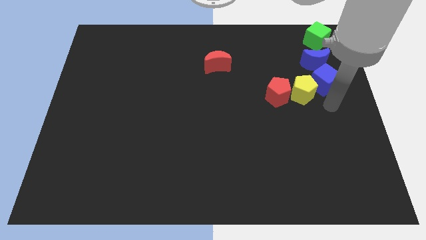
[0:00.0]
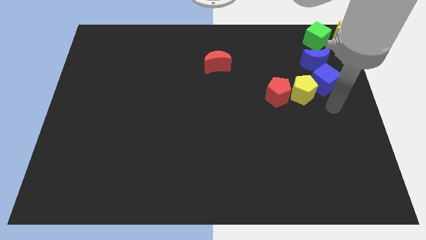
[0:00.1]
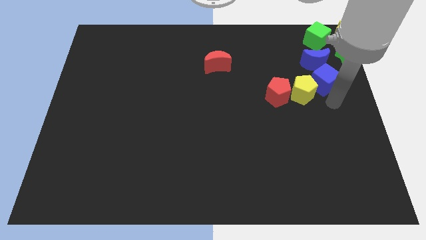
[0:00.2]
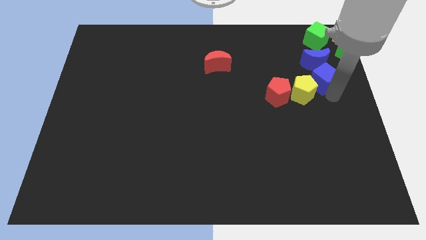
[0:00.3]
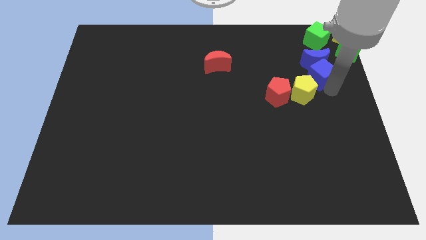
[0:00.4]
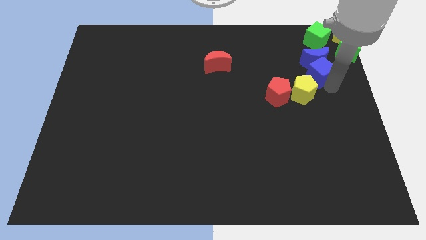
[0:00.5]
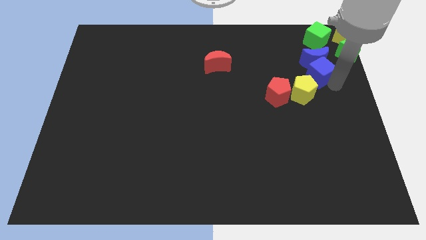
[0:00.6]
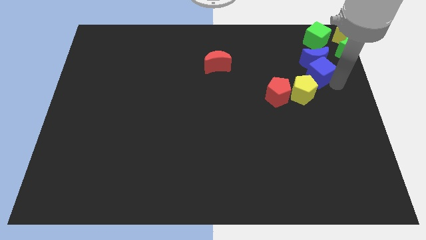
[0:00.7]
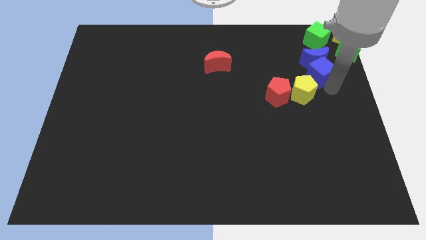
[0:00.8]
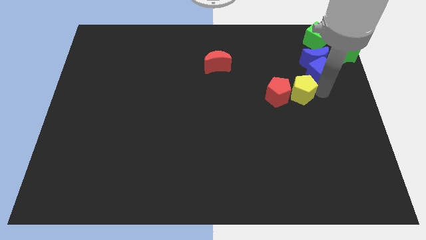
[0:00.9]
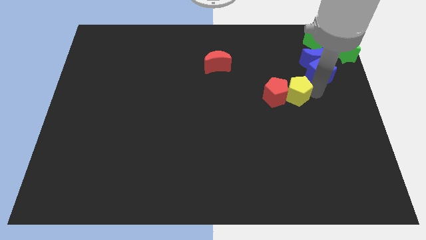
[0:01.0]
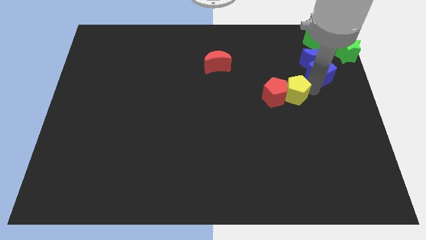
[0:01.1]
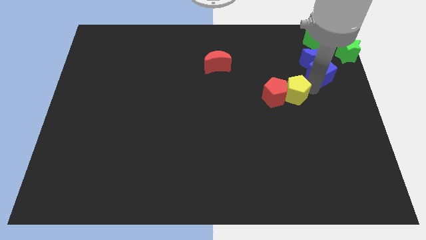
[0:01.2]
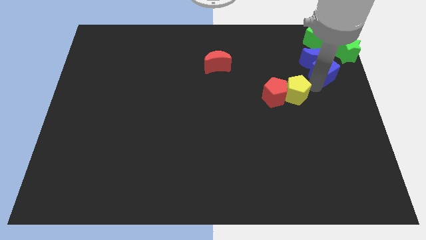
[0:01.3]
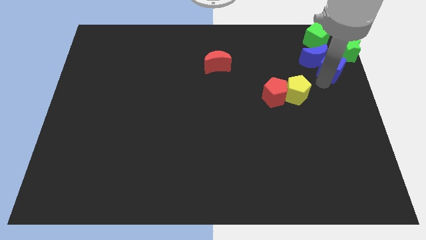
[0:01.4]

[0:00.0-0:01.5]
push the blue cube into the blue moon

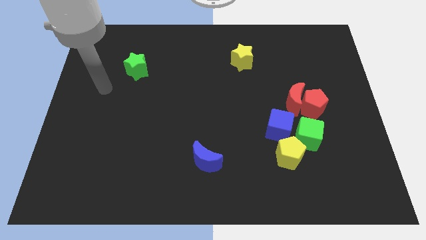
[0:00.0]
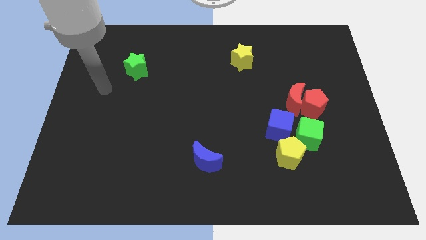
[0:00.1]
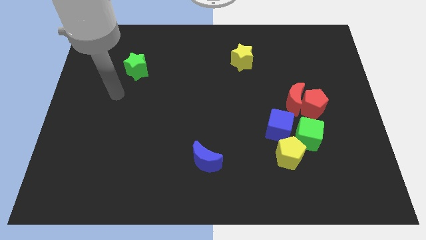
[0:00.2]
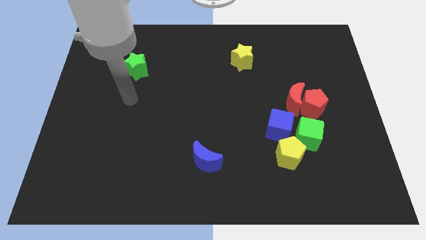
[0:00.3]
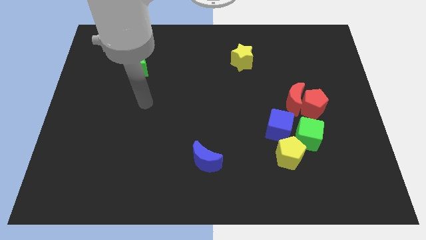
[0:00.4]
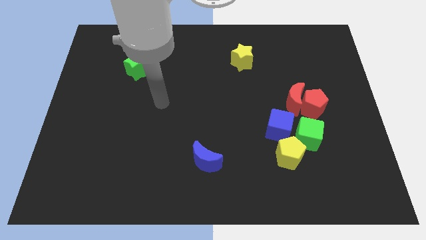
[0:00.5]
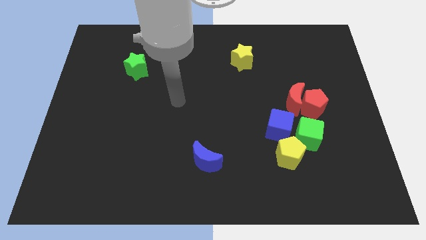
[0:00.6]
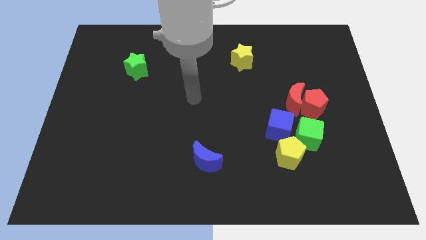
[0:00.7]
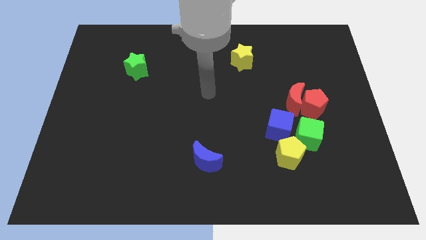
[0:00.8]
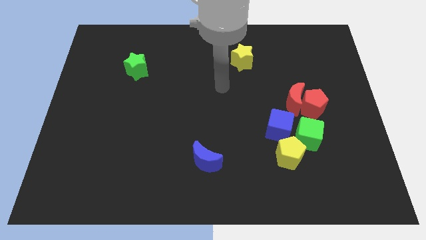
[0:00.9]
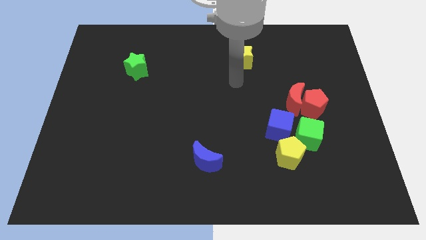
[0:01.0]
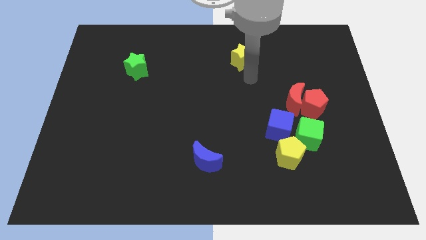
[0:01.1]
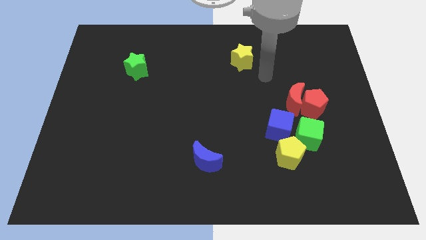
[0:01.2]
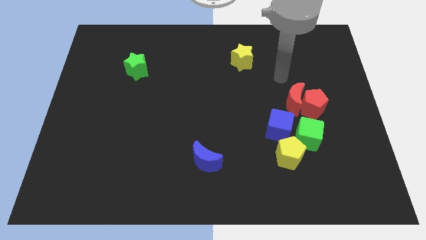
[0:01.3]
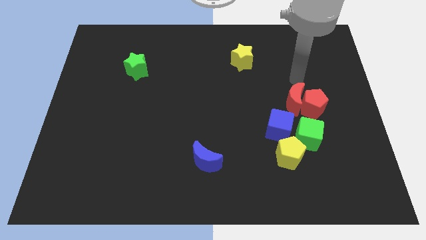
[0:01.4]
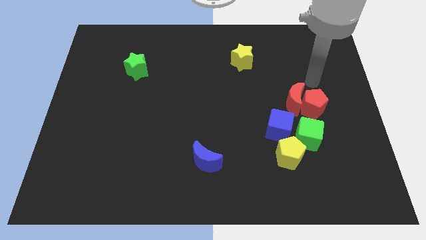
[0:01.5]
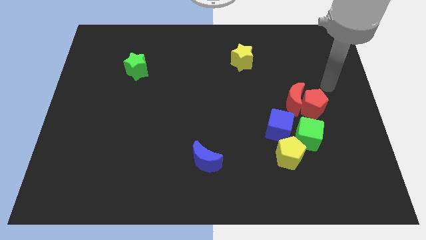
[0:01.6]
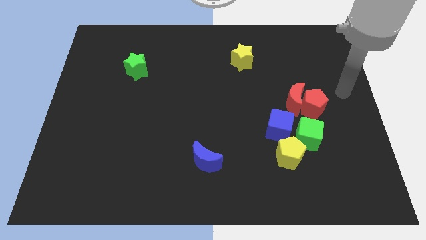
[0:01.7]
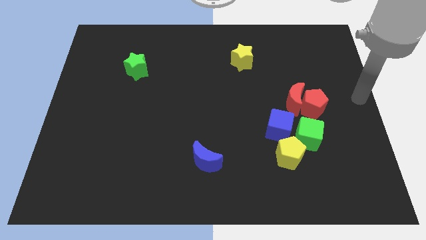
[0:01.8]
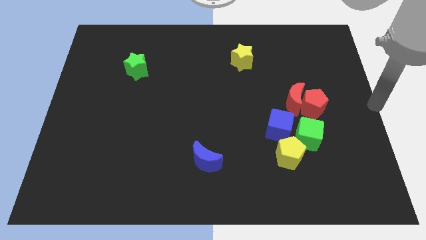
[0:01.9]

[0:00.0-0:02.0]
move the arm towards right center of the board

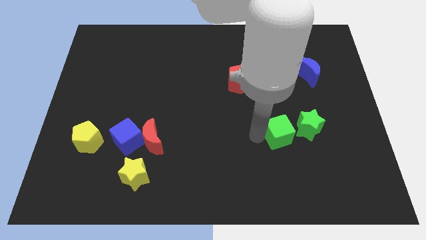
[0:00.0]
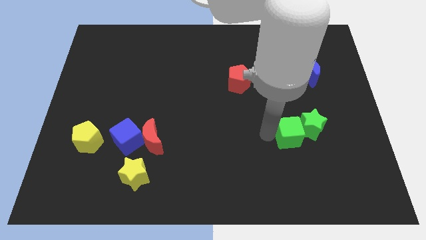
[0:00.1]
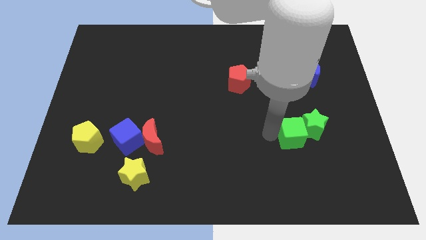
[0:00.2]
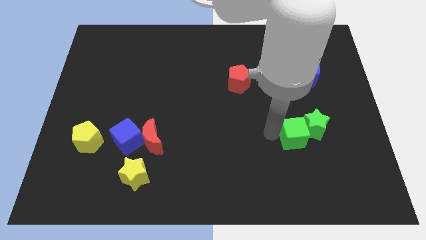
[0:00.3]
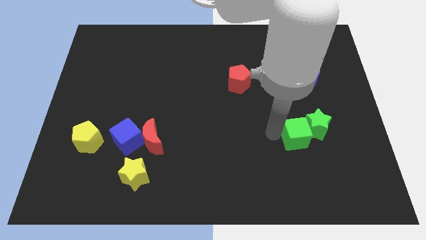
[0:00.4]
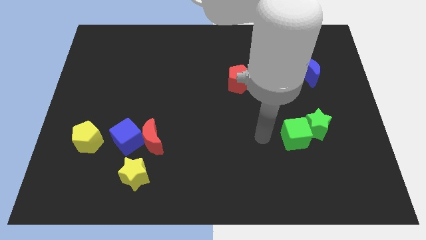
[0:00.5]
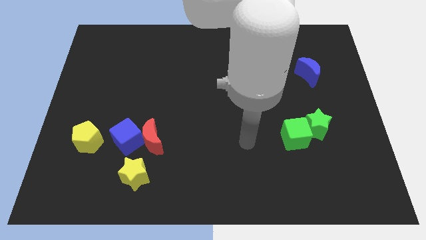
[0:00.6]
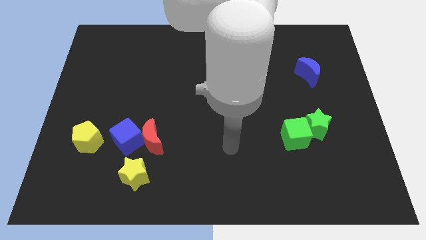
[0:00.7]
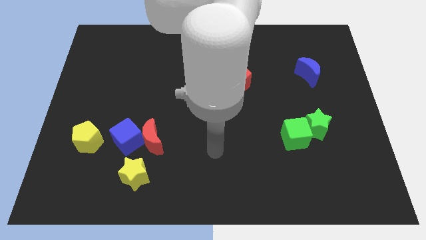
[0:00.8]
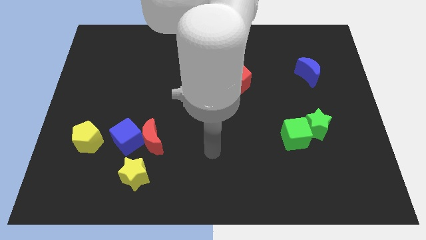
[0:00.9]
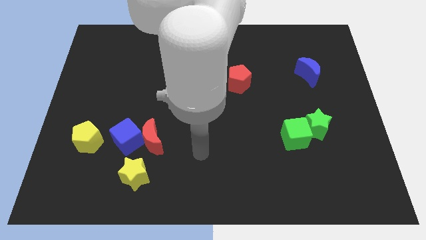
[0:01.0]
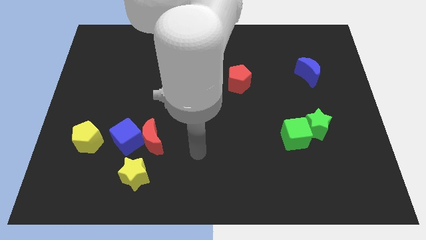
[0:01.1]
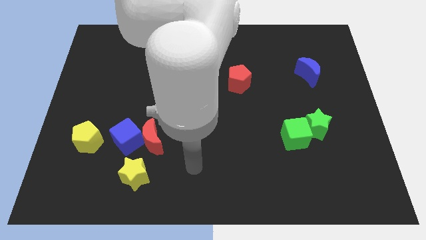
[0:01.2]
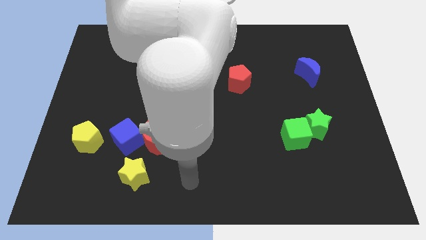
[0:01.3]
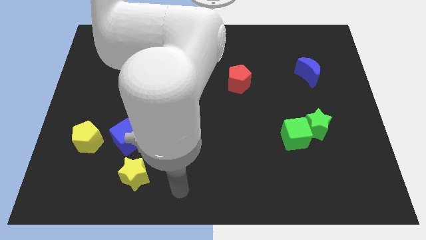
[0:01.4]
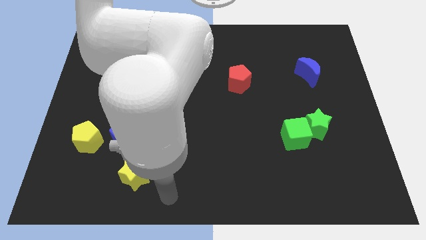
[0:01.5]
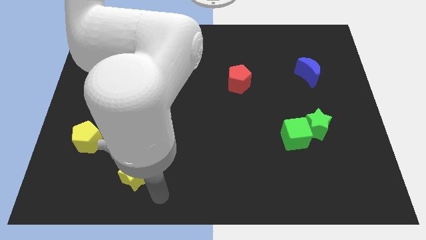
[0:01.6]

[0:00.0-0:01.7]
push the green cube into the green star

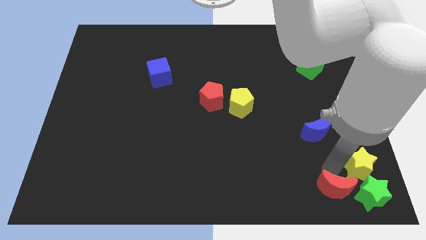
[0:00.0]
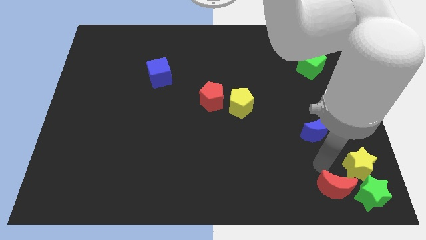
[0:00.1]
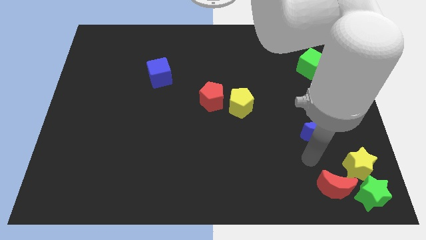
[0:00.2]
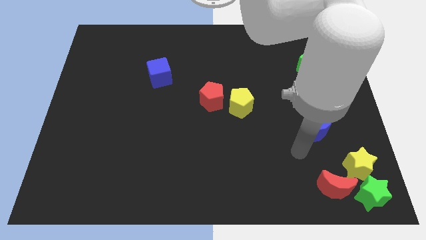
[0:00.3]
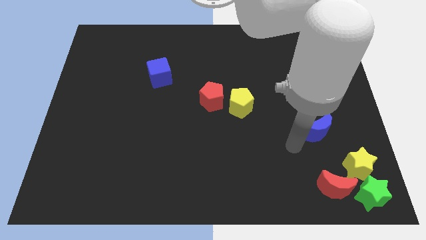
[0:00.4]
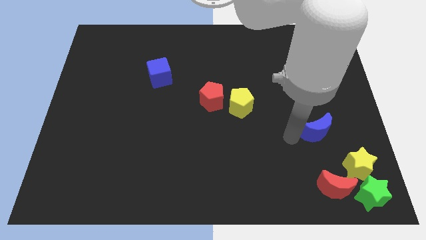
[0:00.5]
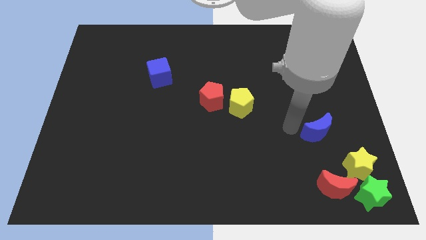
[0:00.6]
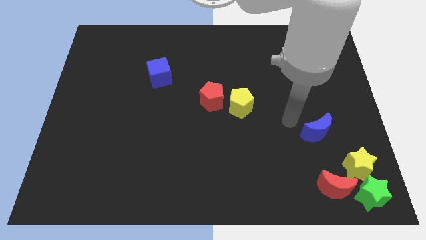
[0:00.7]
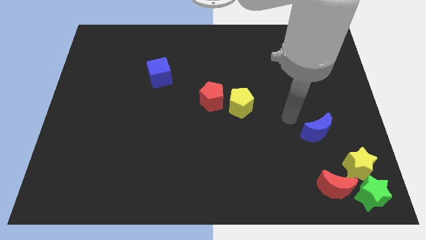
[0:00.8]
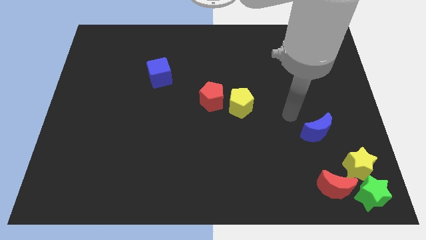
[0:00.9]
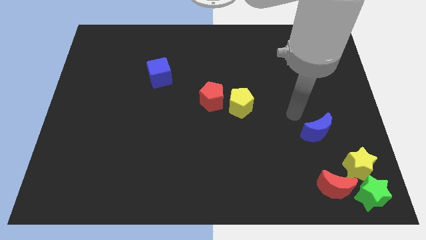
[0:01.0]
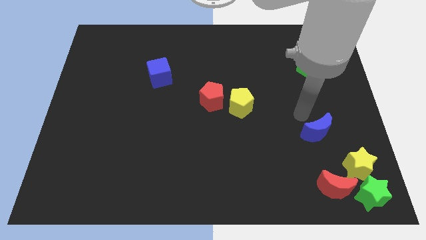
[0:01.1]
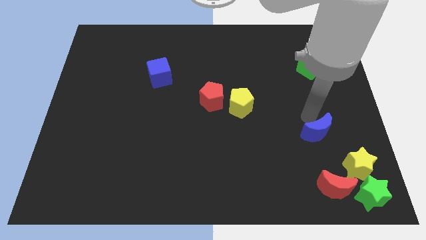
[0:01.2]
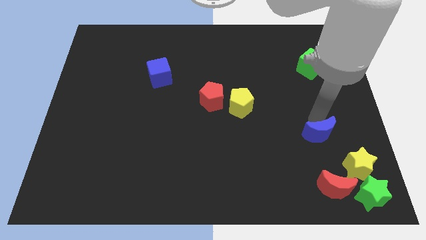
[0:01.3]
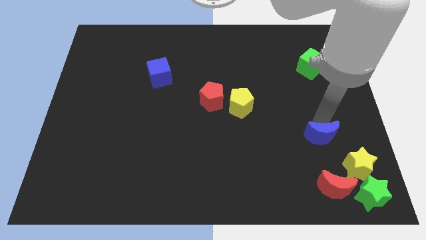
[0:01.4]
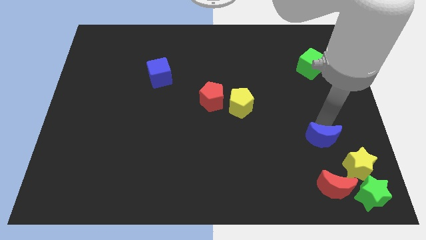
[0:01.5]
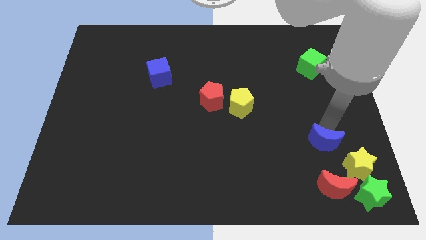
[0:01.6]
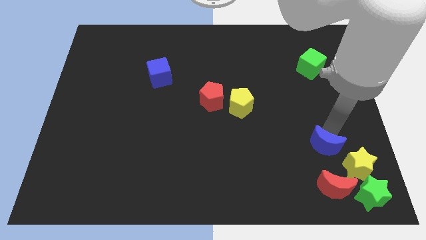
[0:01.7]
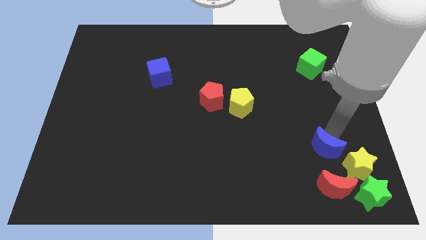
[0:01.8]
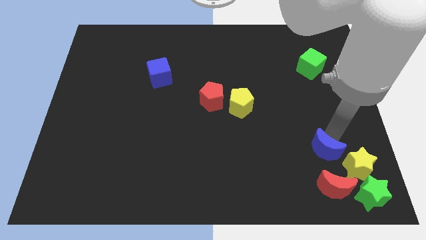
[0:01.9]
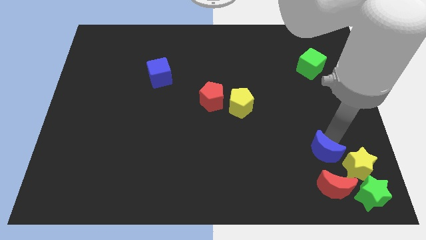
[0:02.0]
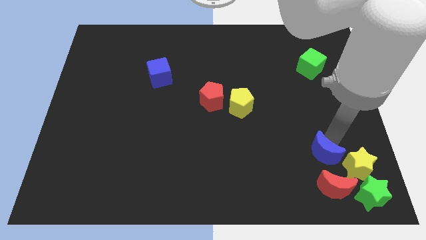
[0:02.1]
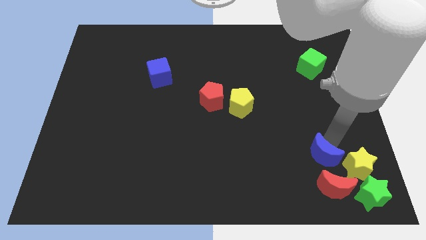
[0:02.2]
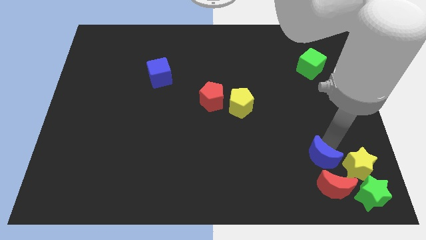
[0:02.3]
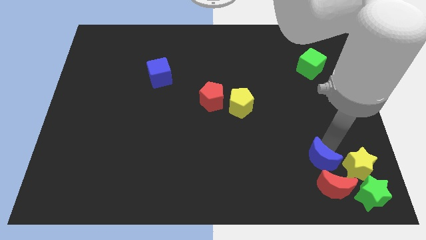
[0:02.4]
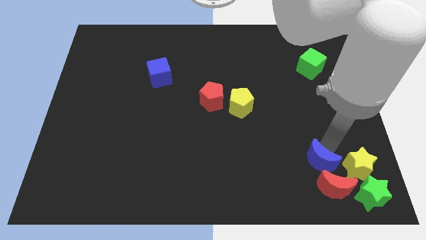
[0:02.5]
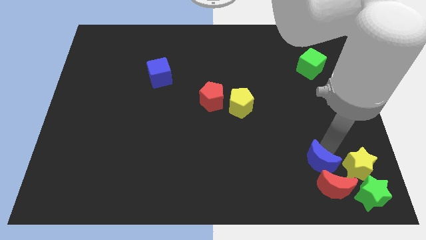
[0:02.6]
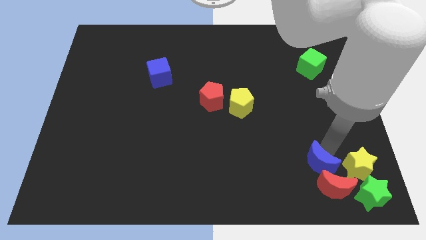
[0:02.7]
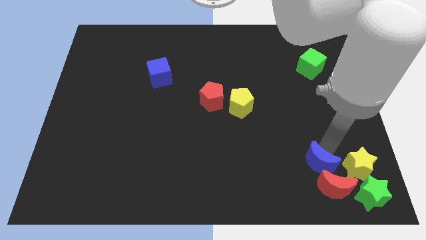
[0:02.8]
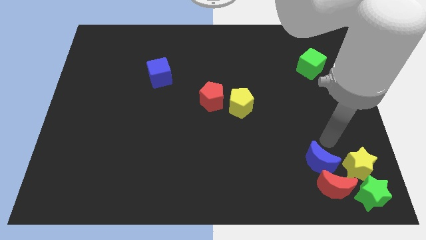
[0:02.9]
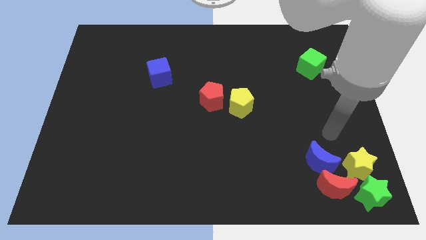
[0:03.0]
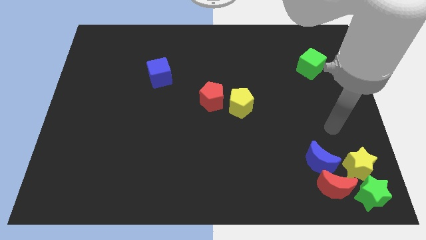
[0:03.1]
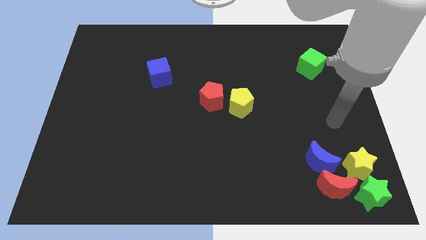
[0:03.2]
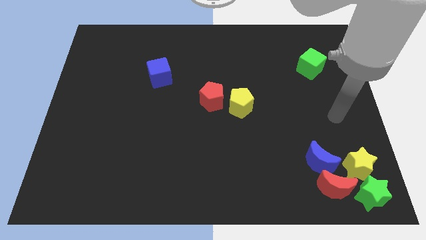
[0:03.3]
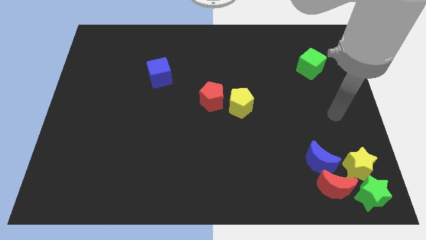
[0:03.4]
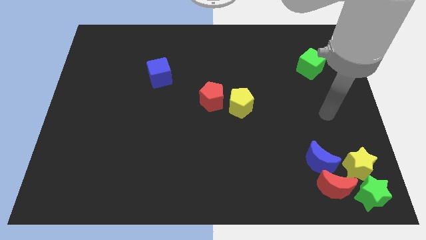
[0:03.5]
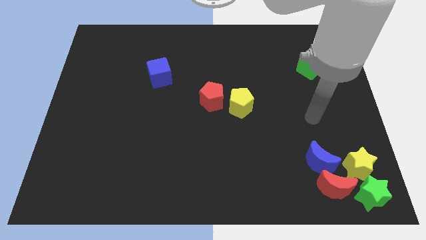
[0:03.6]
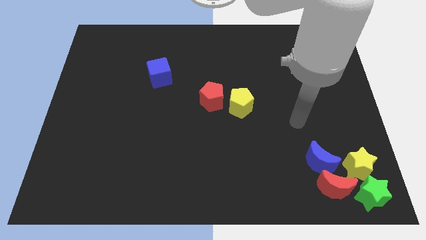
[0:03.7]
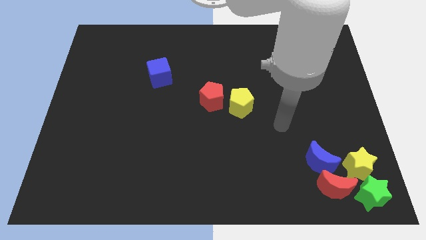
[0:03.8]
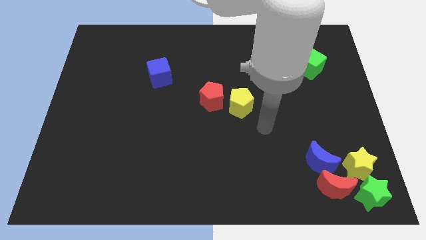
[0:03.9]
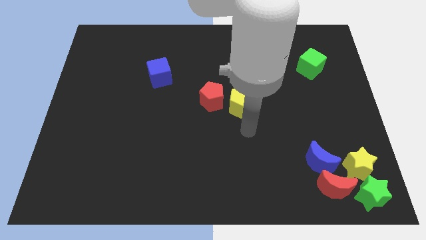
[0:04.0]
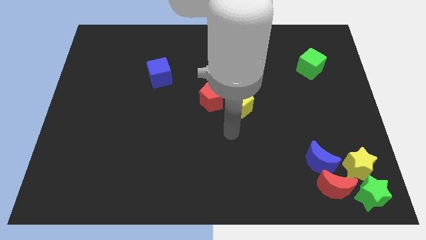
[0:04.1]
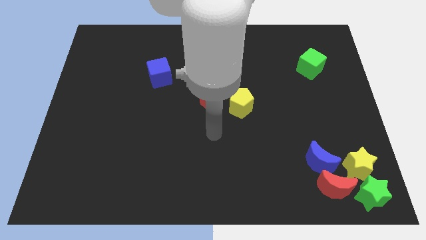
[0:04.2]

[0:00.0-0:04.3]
move the blue crescent to the top of the red crescent
